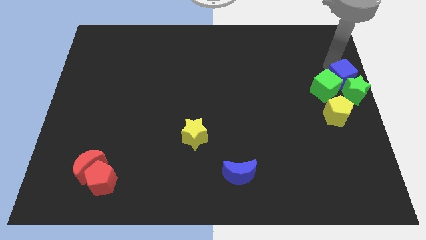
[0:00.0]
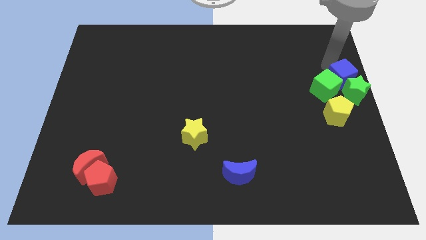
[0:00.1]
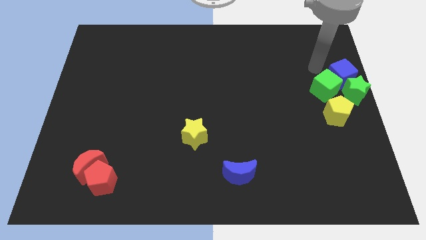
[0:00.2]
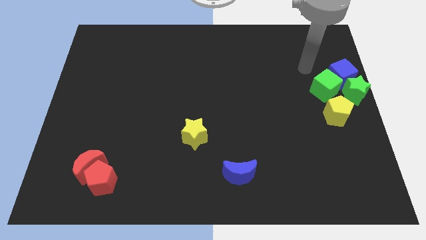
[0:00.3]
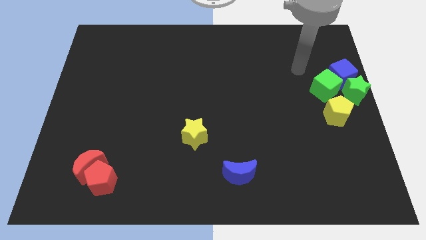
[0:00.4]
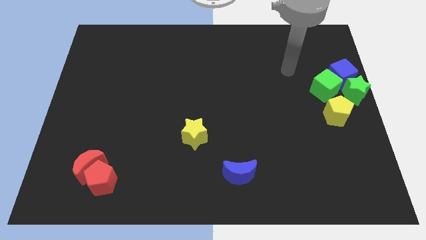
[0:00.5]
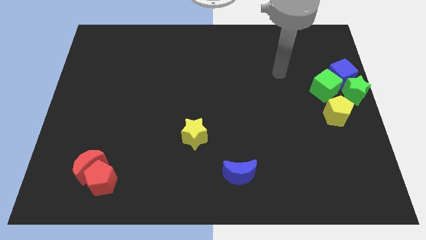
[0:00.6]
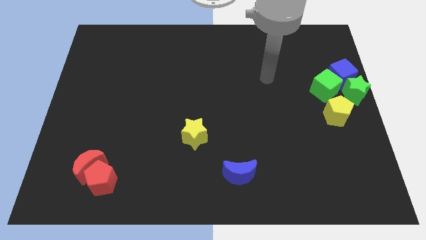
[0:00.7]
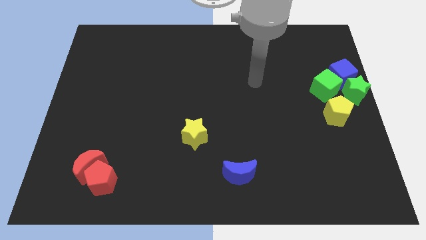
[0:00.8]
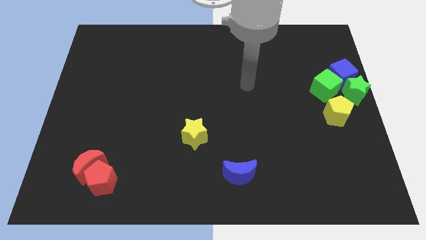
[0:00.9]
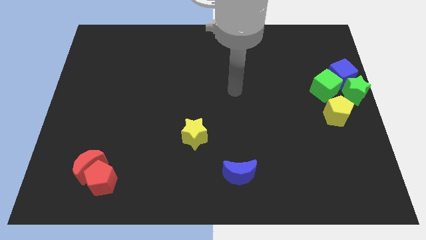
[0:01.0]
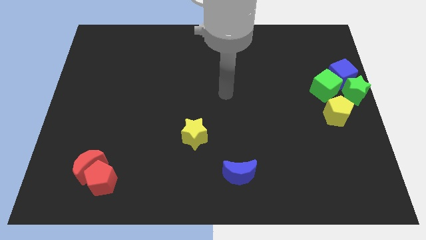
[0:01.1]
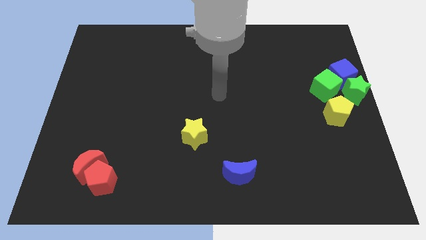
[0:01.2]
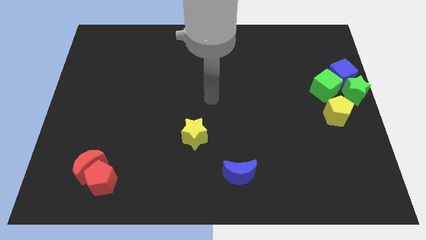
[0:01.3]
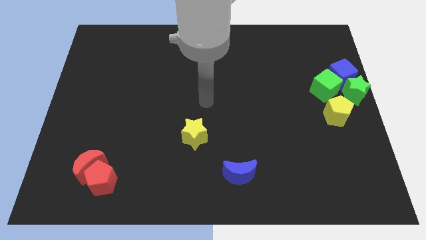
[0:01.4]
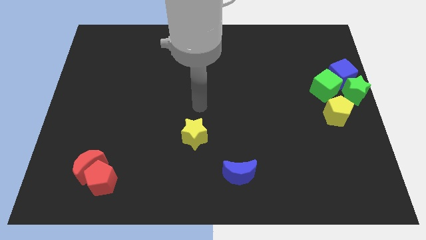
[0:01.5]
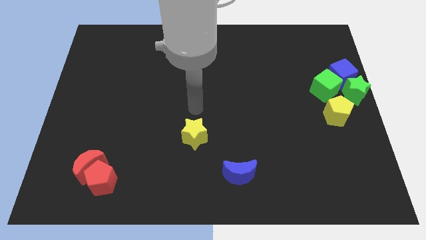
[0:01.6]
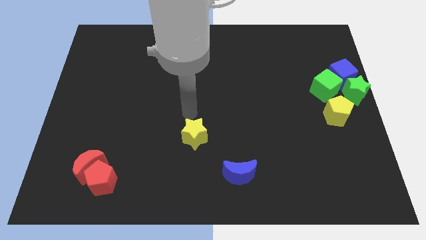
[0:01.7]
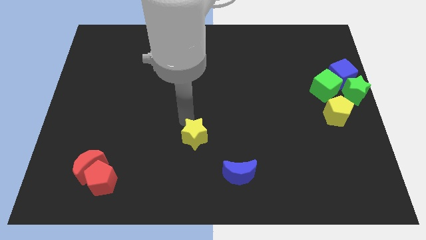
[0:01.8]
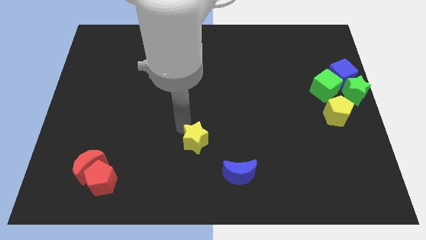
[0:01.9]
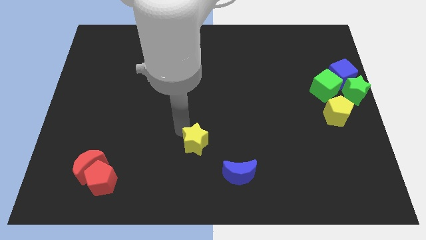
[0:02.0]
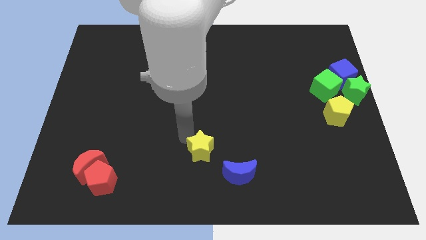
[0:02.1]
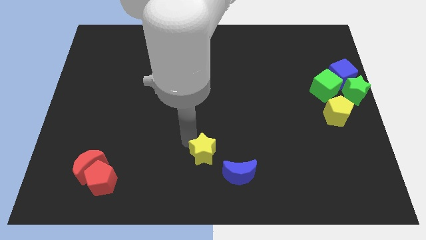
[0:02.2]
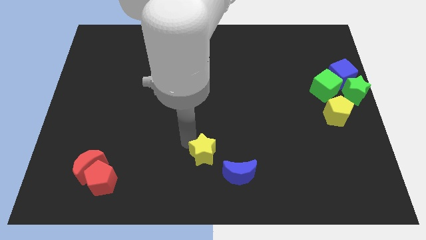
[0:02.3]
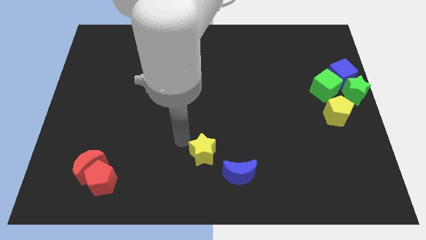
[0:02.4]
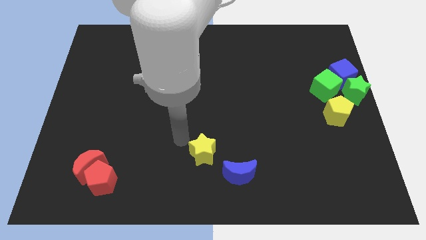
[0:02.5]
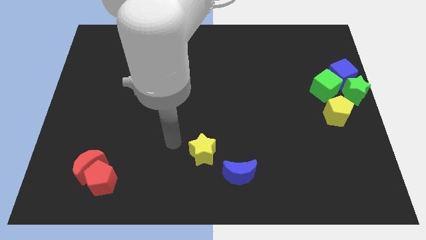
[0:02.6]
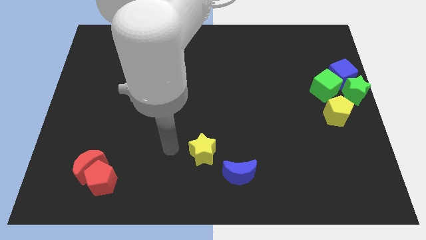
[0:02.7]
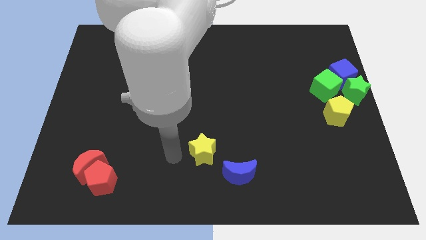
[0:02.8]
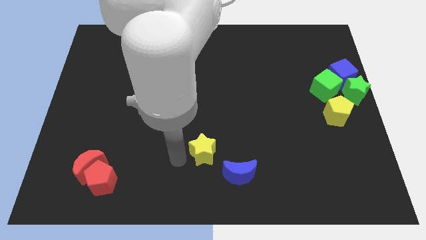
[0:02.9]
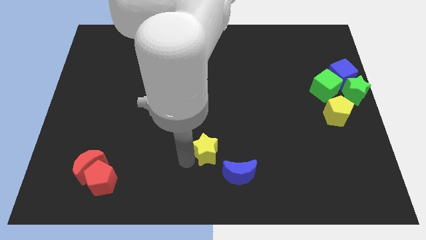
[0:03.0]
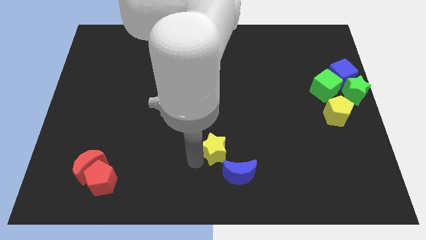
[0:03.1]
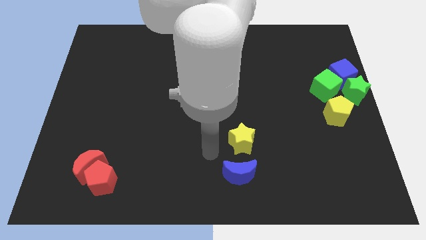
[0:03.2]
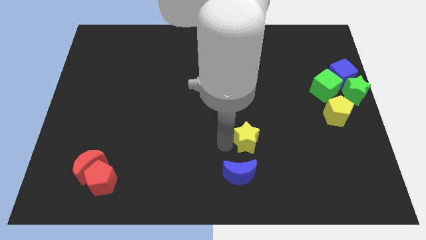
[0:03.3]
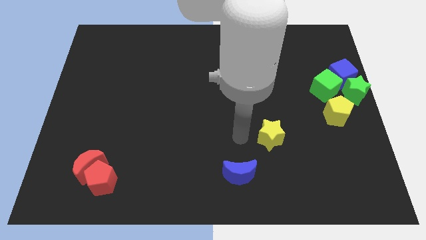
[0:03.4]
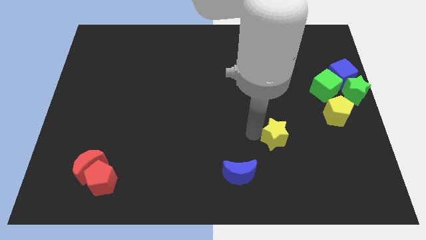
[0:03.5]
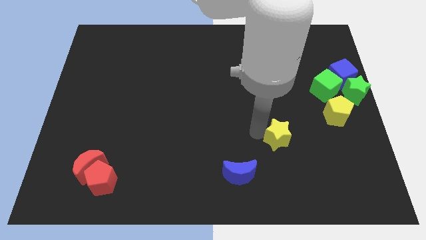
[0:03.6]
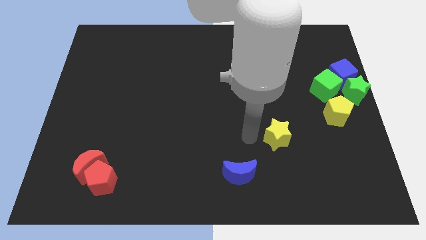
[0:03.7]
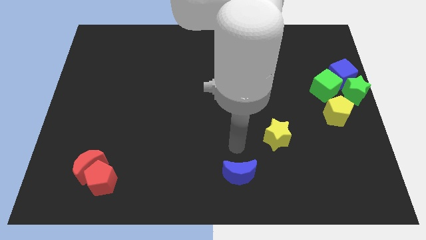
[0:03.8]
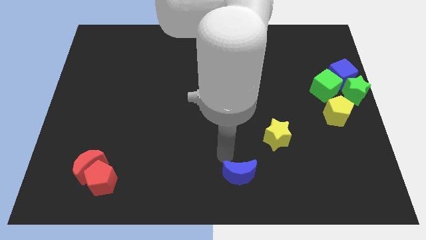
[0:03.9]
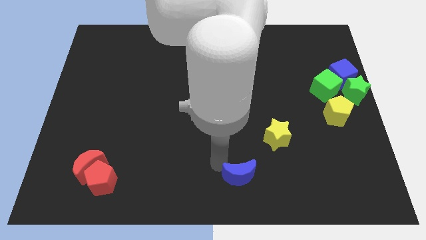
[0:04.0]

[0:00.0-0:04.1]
place the yellow star towards the top right to the blue moon
